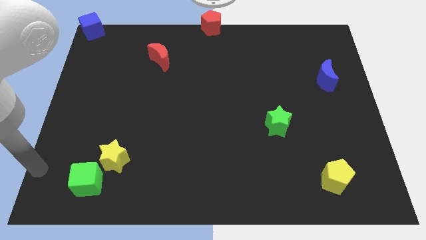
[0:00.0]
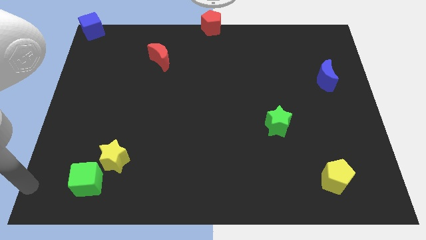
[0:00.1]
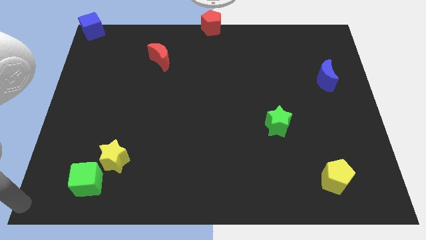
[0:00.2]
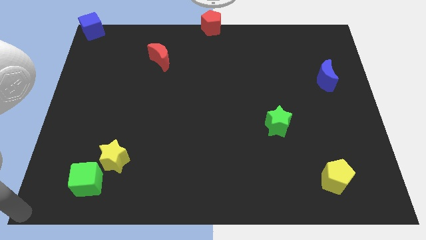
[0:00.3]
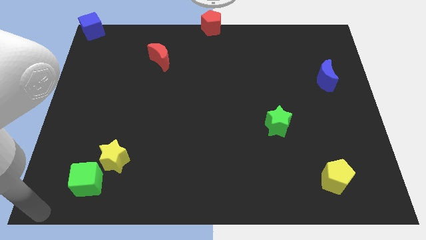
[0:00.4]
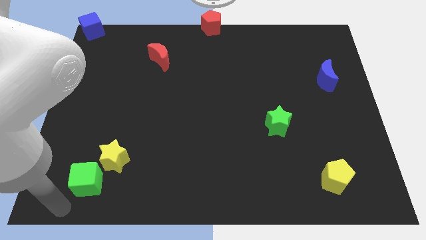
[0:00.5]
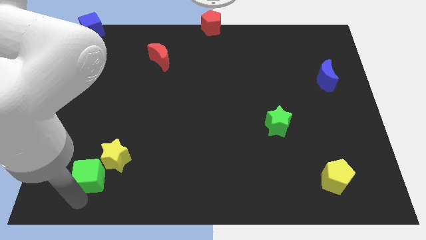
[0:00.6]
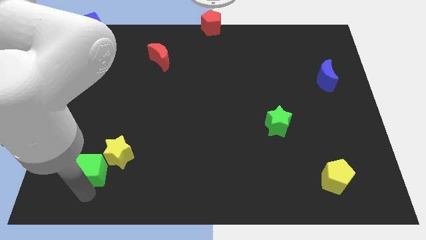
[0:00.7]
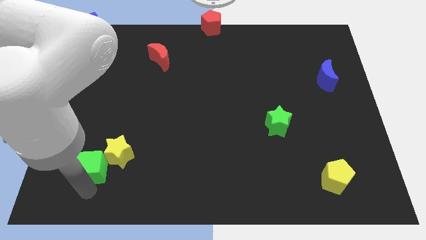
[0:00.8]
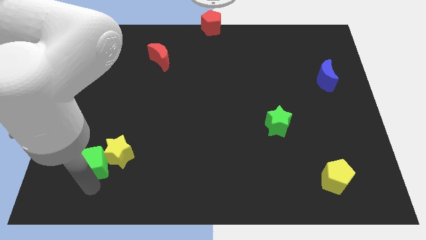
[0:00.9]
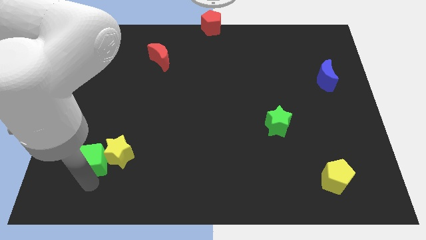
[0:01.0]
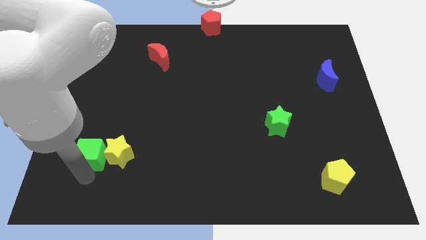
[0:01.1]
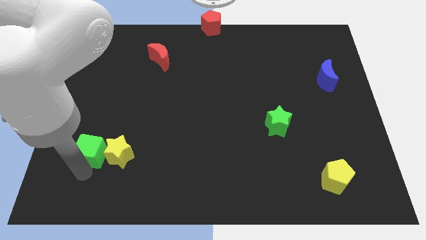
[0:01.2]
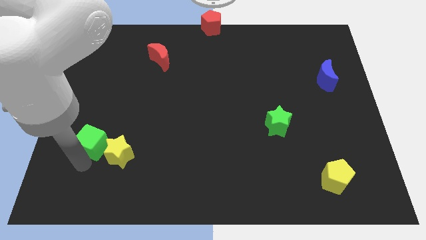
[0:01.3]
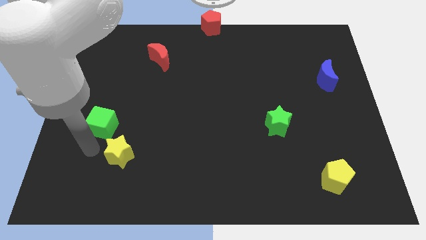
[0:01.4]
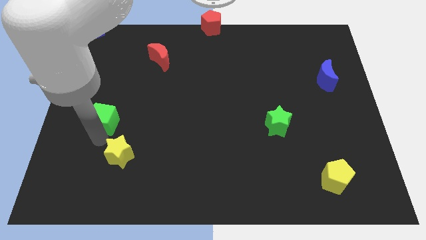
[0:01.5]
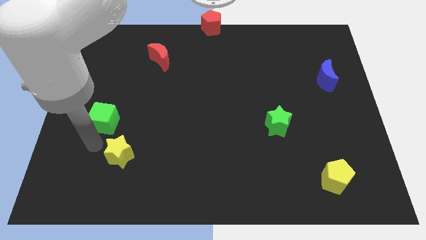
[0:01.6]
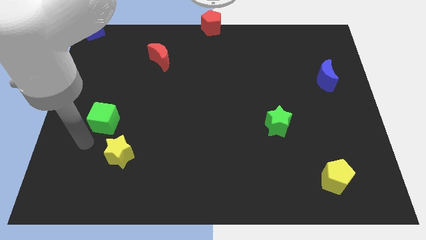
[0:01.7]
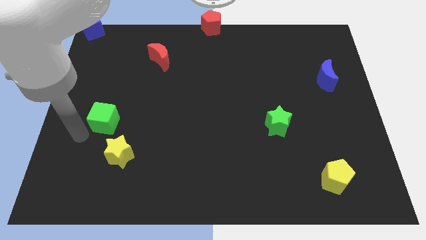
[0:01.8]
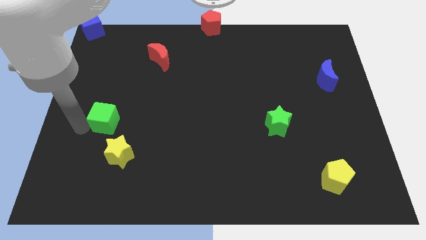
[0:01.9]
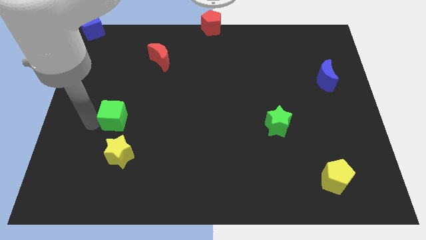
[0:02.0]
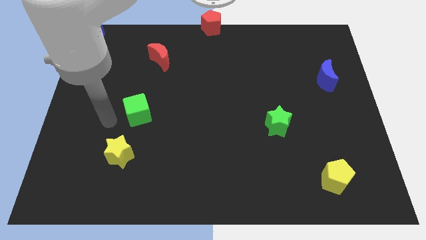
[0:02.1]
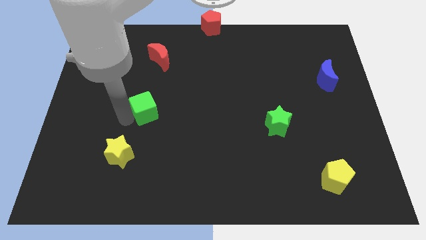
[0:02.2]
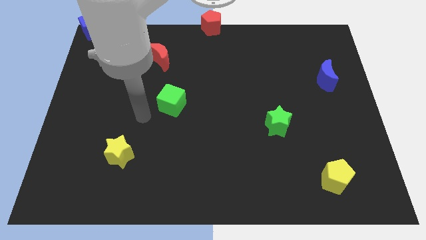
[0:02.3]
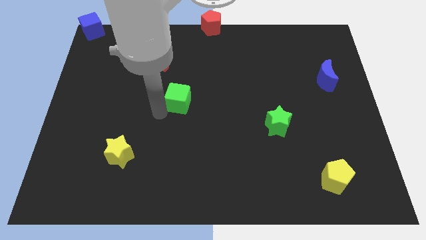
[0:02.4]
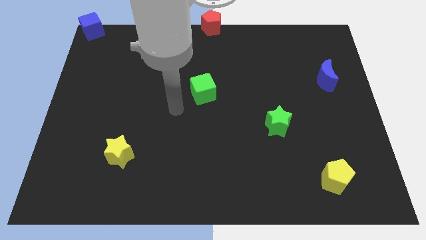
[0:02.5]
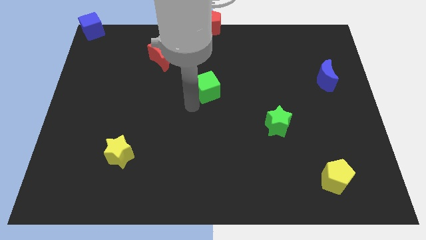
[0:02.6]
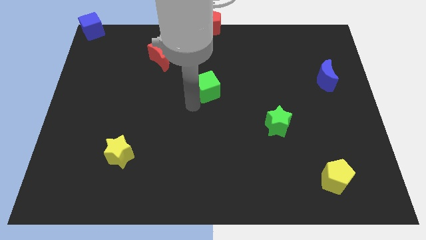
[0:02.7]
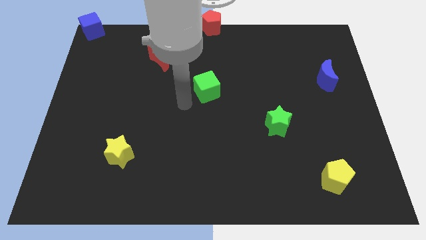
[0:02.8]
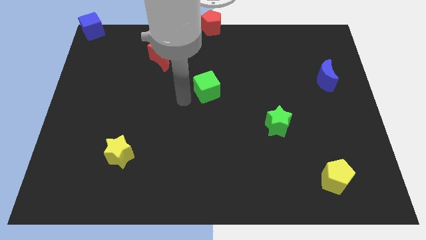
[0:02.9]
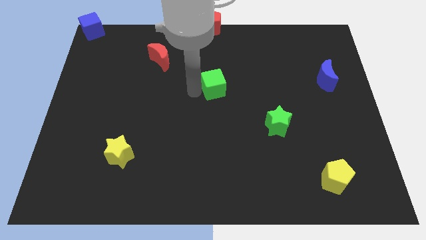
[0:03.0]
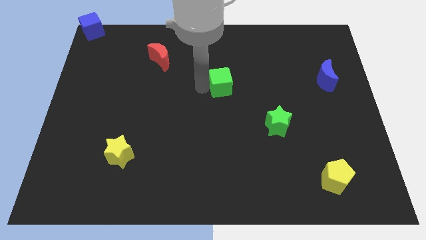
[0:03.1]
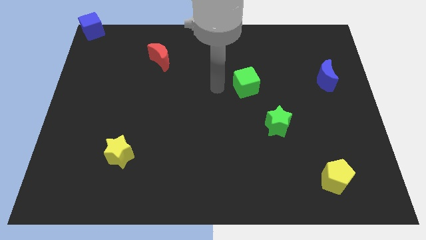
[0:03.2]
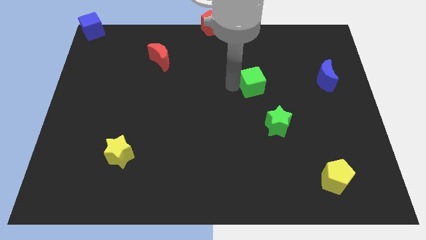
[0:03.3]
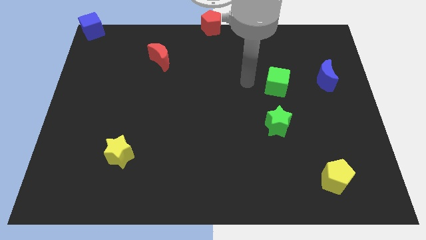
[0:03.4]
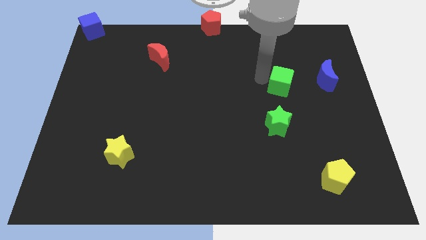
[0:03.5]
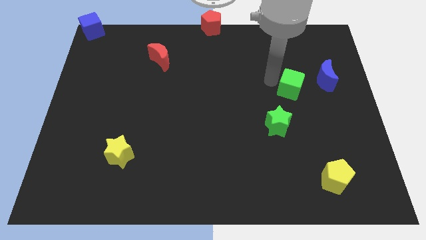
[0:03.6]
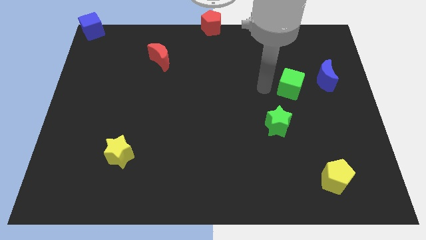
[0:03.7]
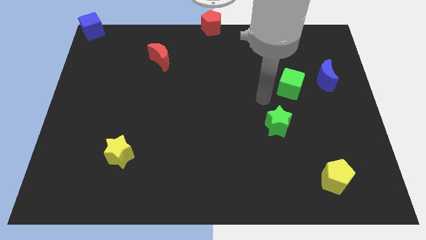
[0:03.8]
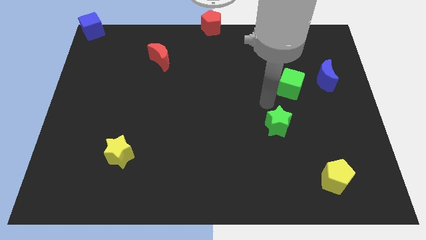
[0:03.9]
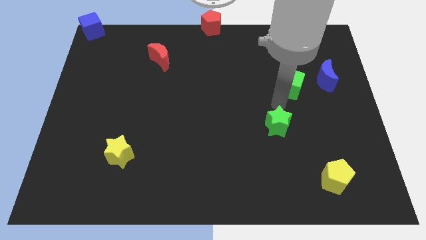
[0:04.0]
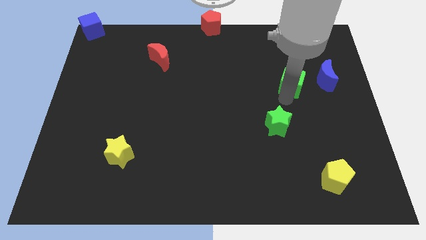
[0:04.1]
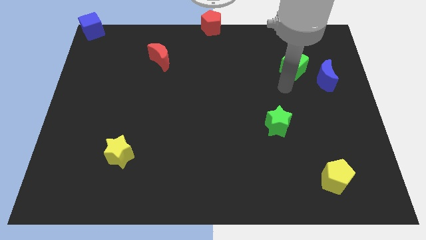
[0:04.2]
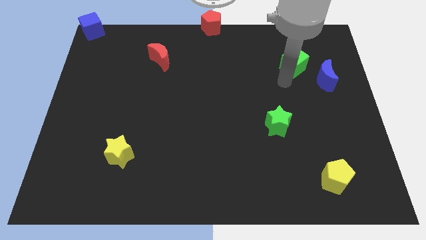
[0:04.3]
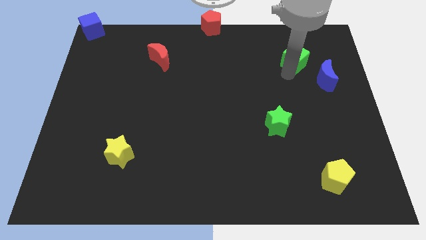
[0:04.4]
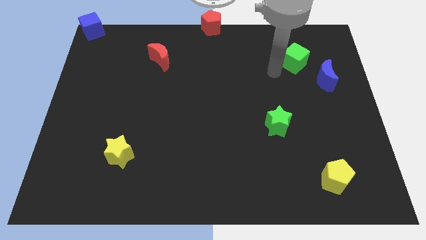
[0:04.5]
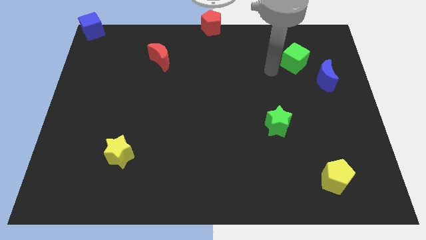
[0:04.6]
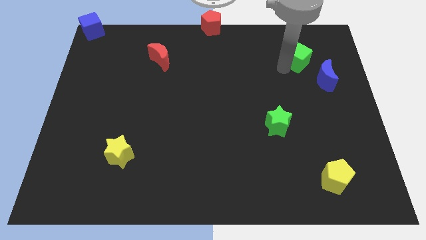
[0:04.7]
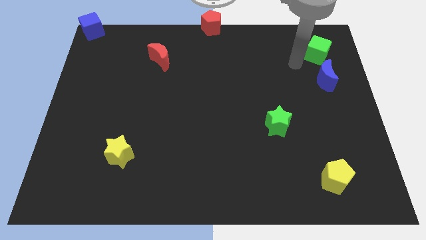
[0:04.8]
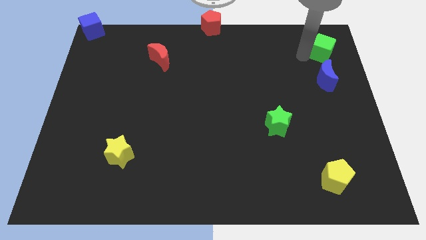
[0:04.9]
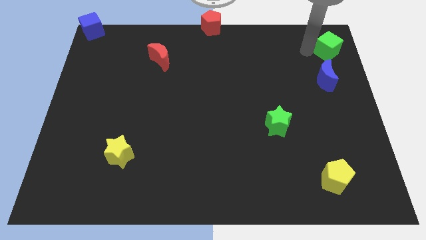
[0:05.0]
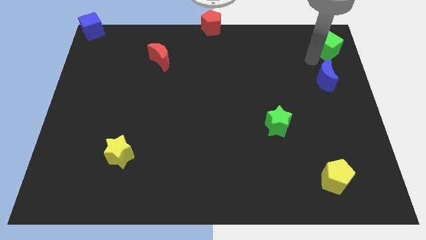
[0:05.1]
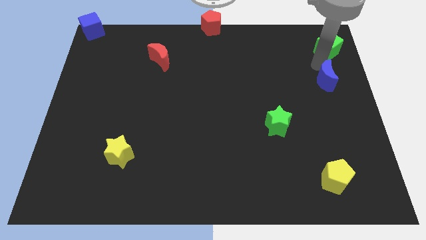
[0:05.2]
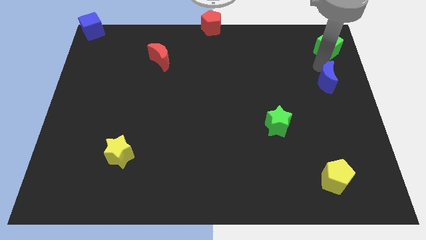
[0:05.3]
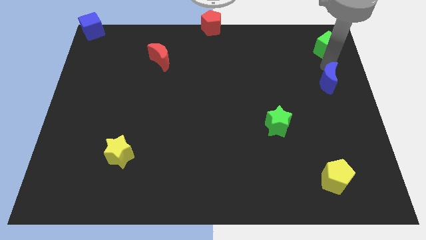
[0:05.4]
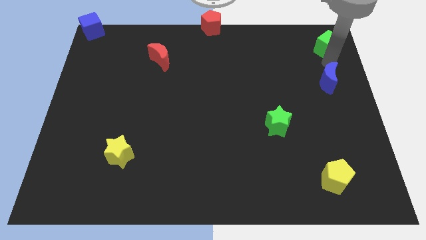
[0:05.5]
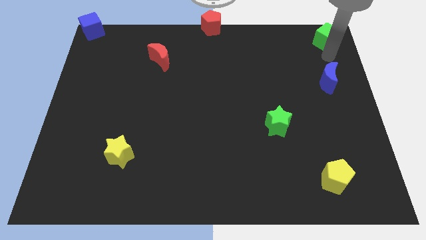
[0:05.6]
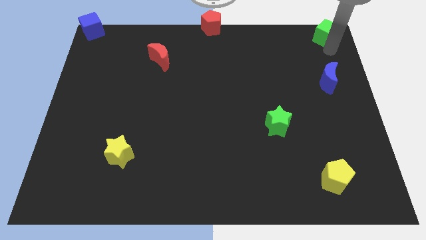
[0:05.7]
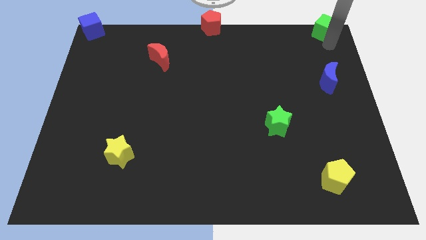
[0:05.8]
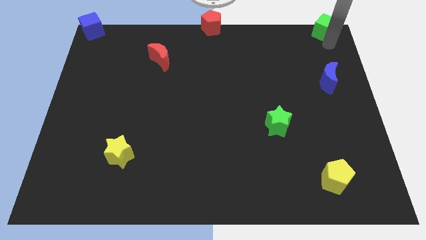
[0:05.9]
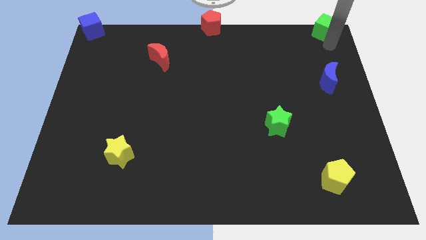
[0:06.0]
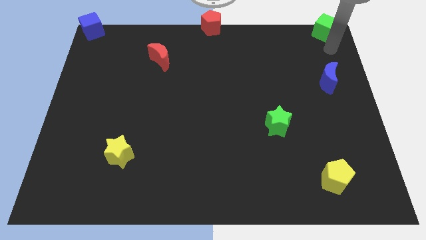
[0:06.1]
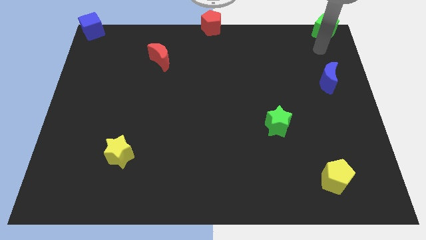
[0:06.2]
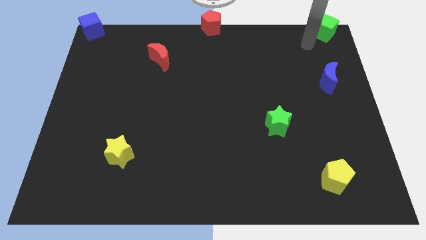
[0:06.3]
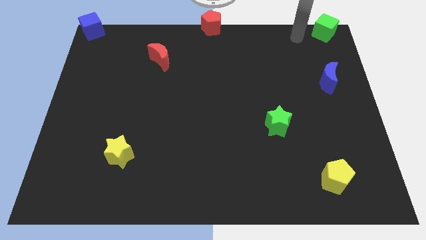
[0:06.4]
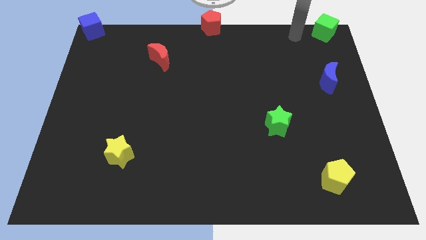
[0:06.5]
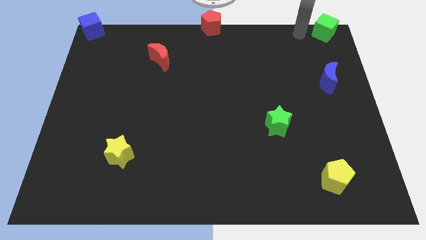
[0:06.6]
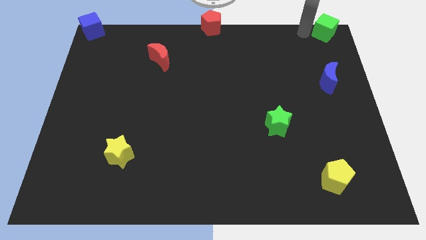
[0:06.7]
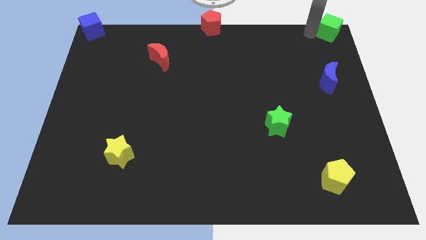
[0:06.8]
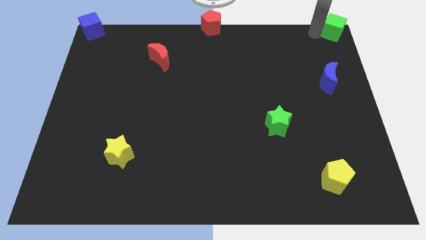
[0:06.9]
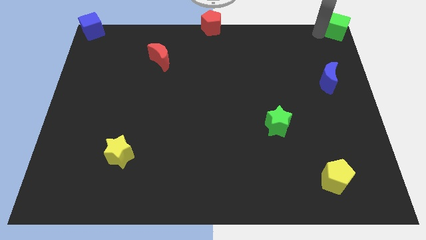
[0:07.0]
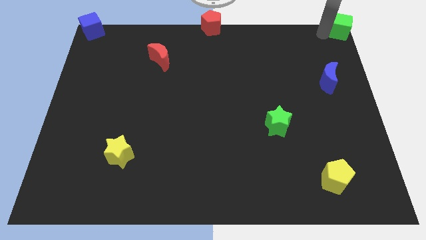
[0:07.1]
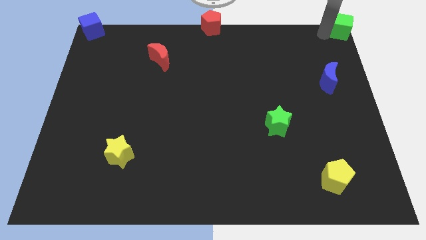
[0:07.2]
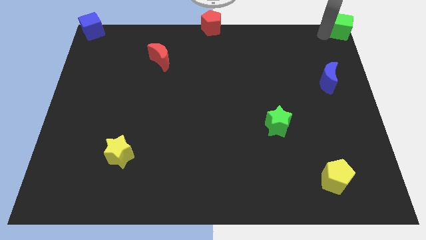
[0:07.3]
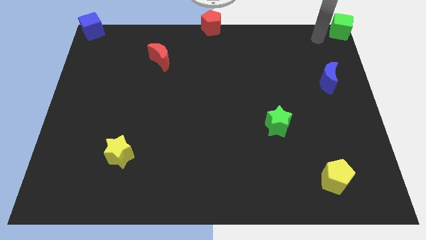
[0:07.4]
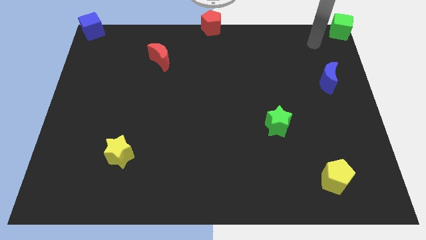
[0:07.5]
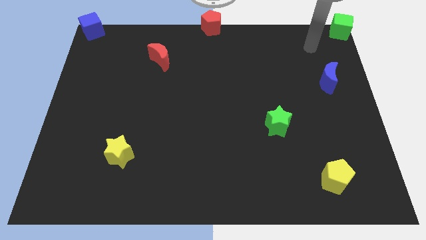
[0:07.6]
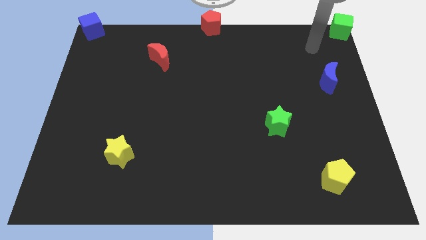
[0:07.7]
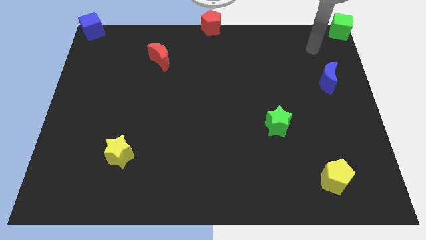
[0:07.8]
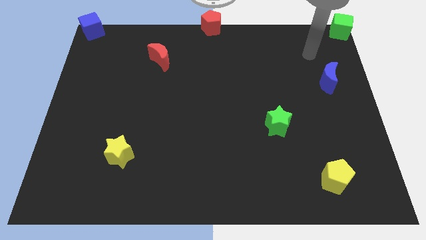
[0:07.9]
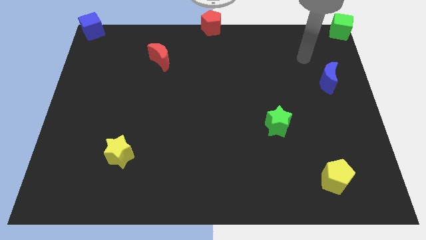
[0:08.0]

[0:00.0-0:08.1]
push the green cube towards the top right corner of the board

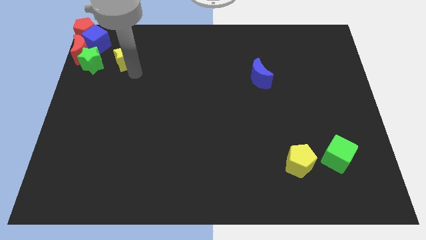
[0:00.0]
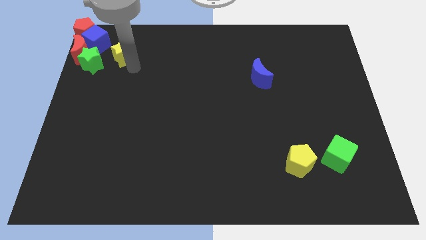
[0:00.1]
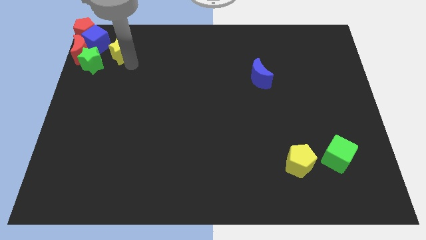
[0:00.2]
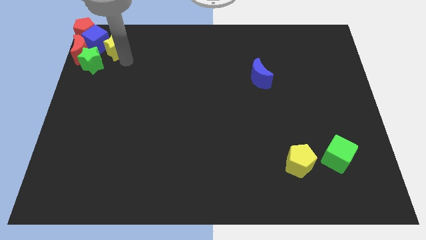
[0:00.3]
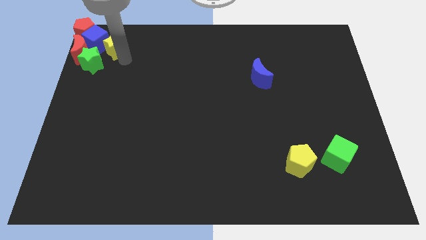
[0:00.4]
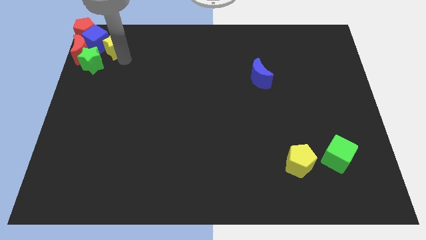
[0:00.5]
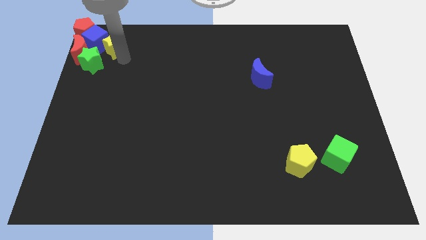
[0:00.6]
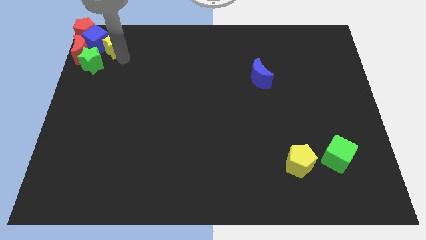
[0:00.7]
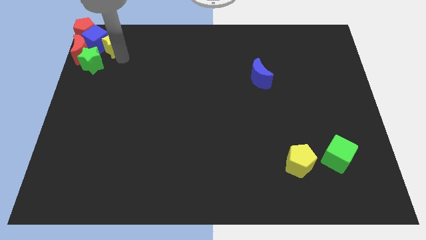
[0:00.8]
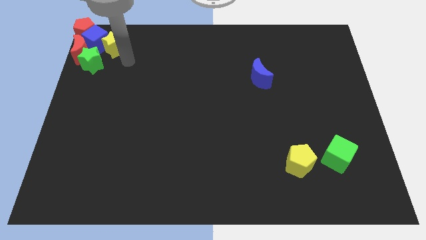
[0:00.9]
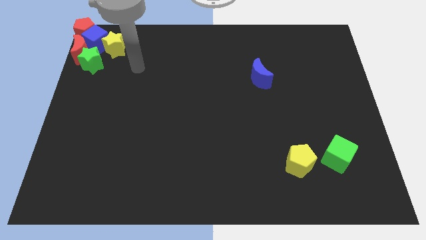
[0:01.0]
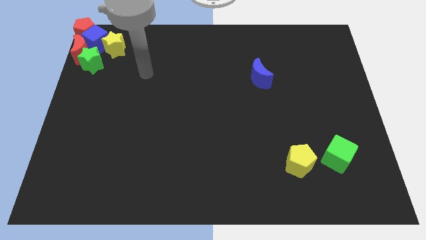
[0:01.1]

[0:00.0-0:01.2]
slide yellow star into blue cube
